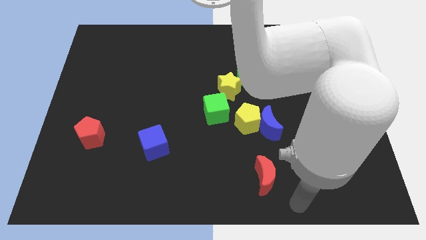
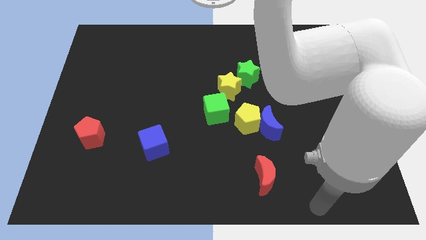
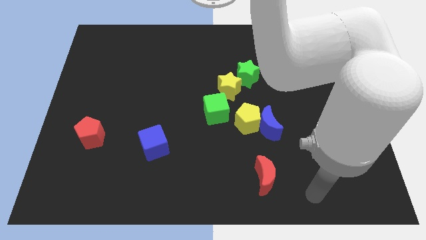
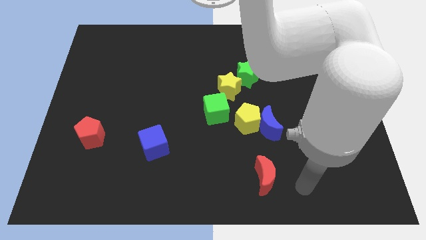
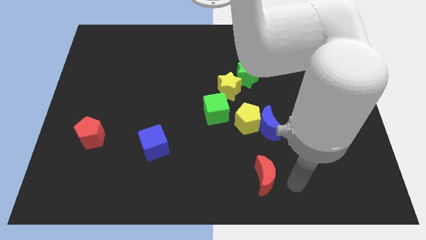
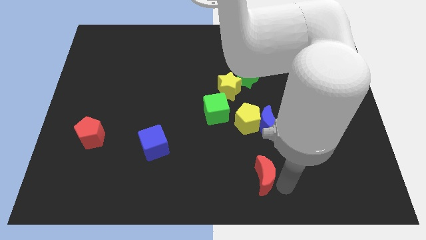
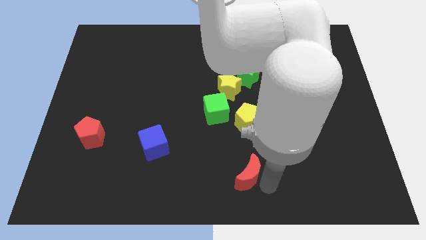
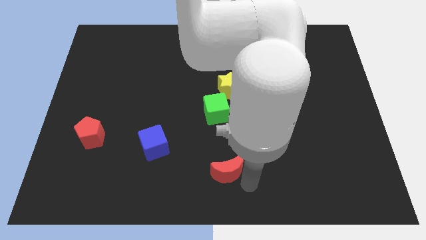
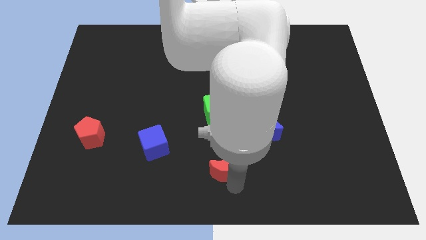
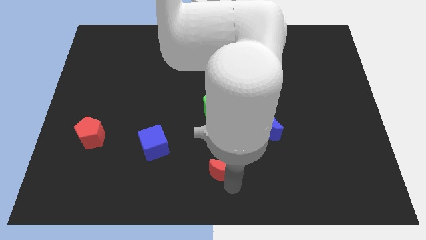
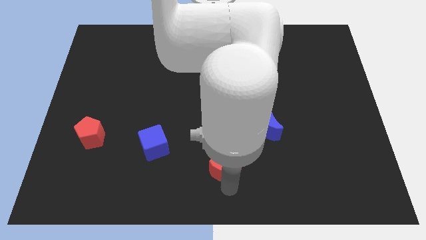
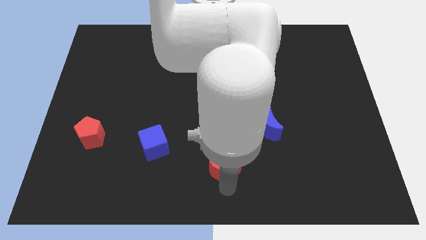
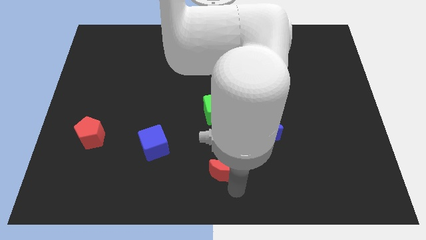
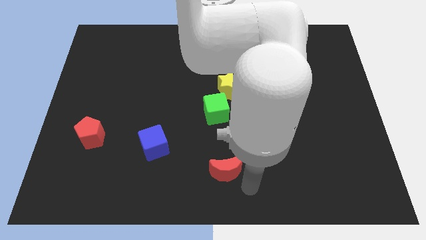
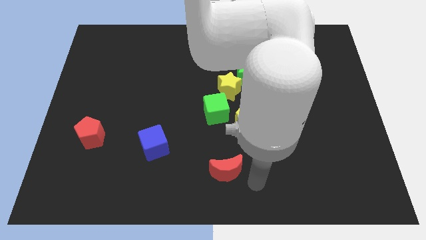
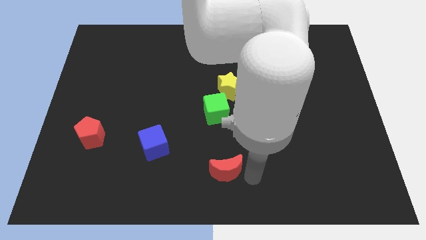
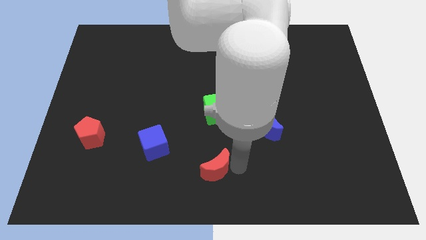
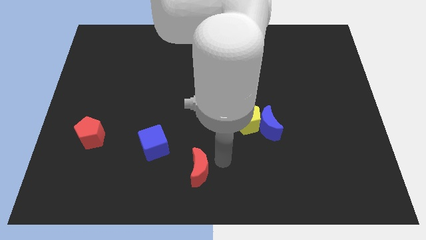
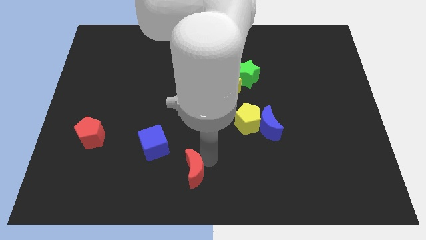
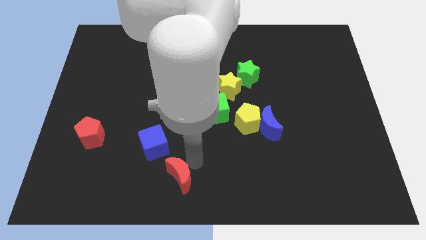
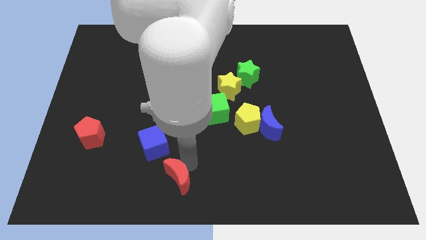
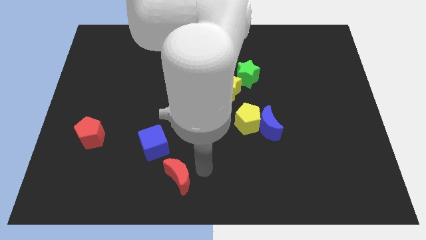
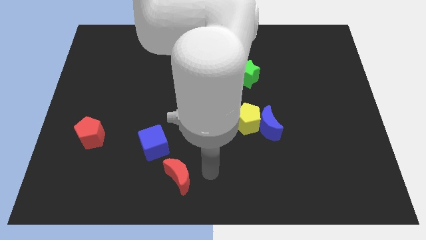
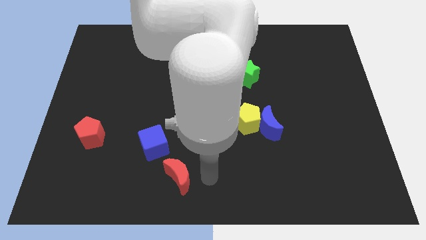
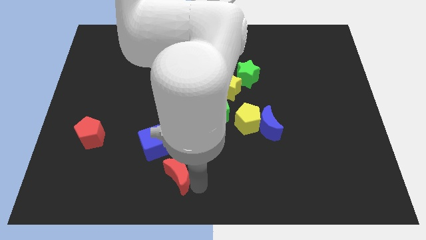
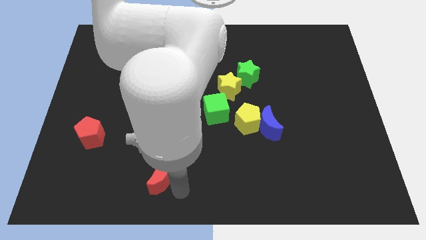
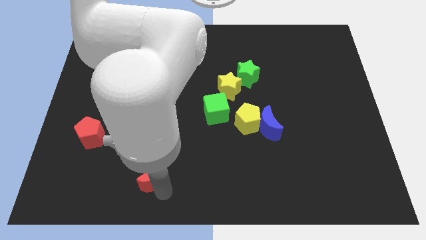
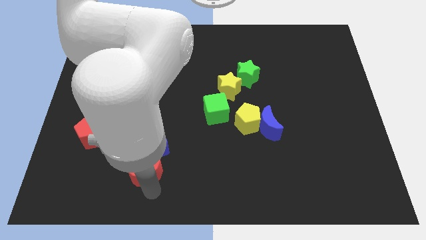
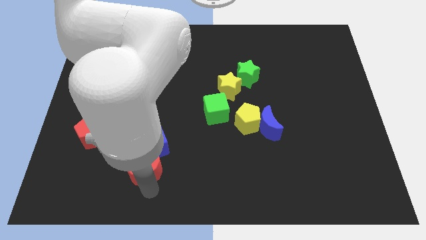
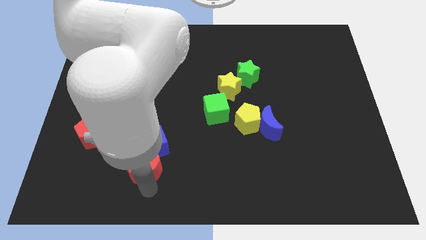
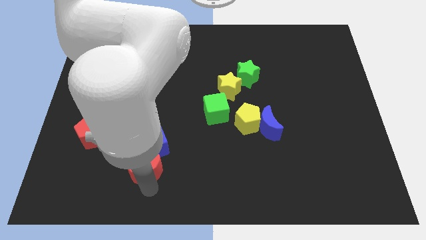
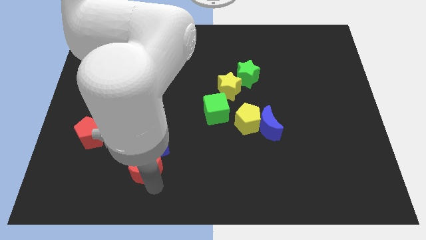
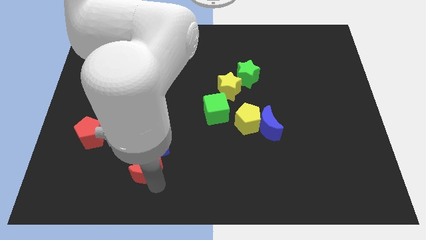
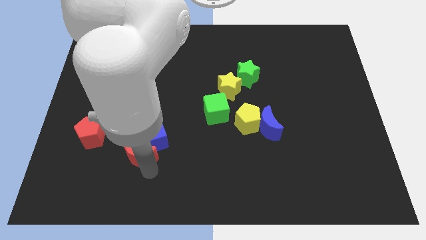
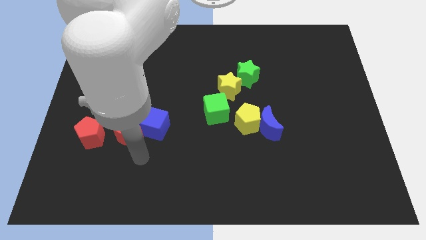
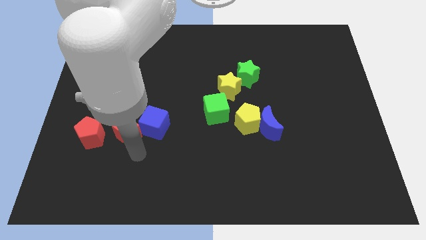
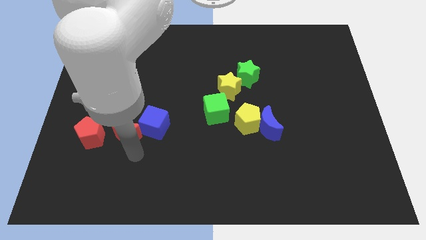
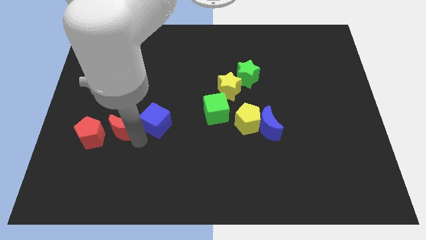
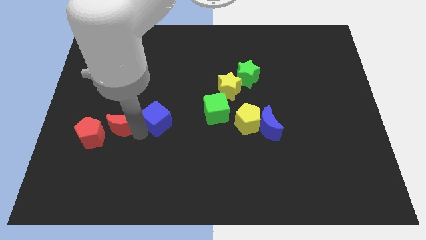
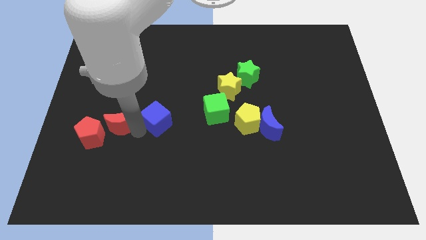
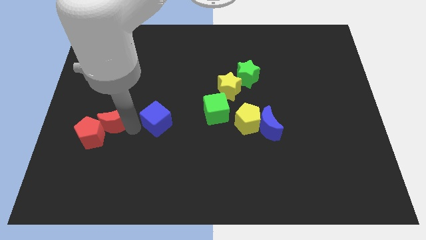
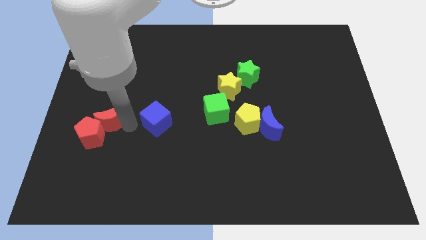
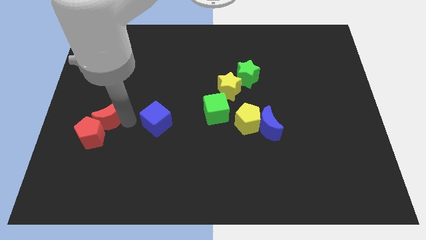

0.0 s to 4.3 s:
move the red crescent to the top right of the red pentagon

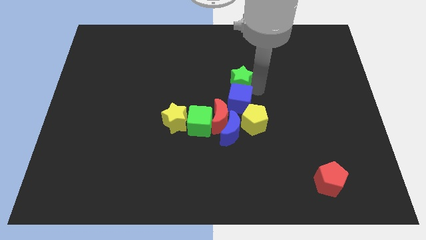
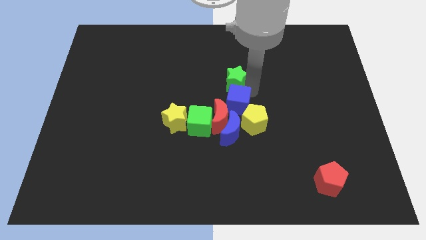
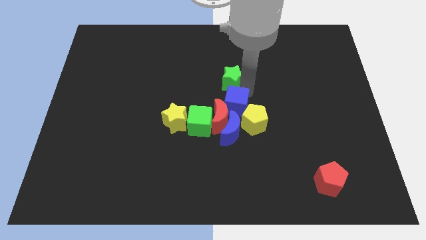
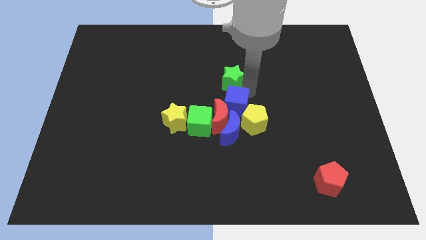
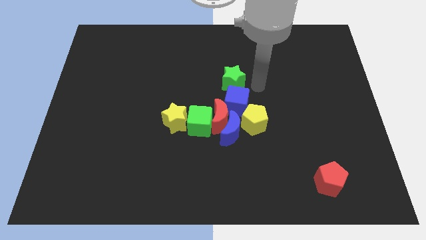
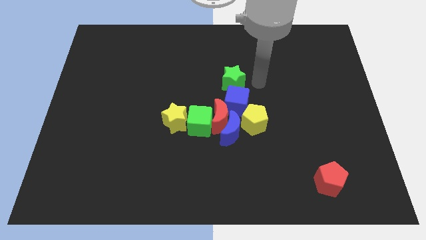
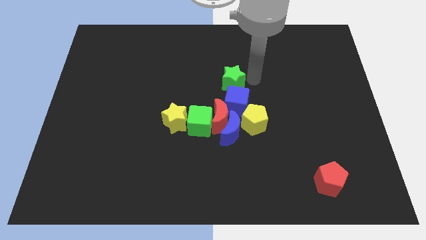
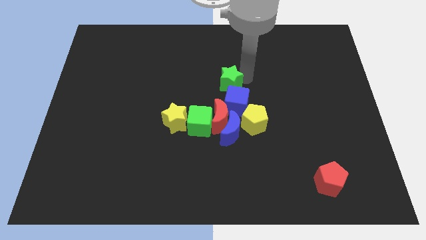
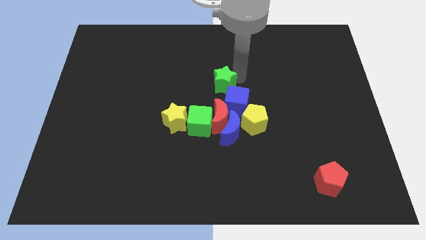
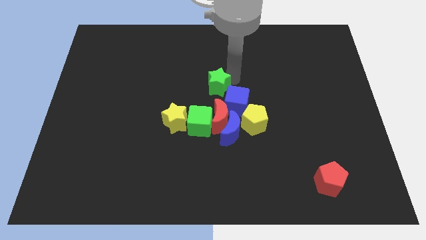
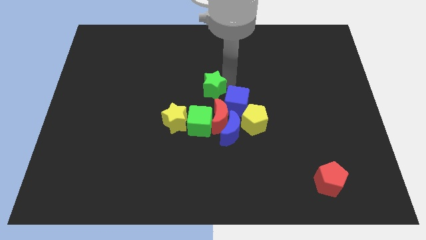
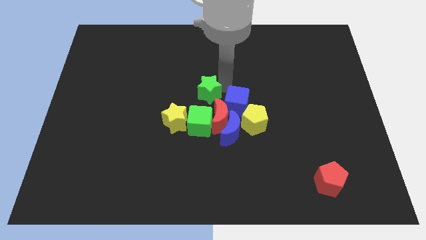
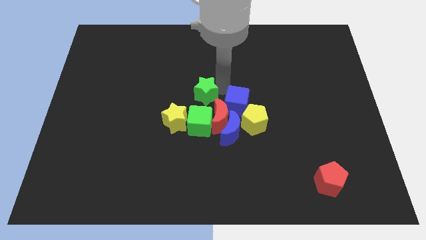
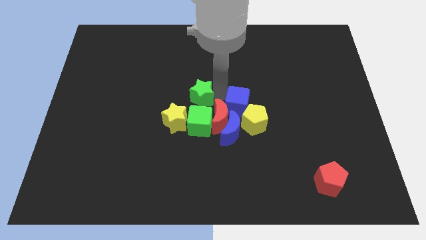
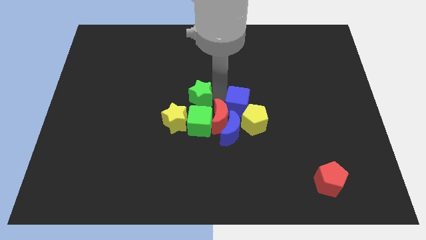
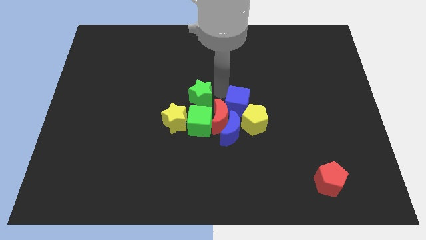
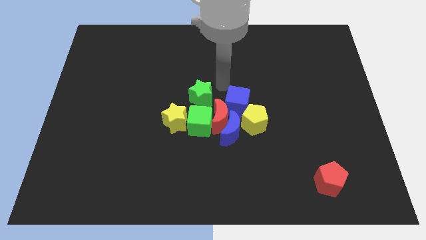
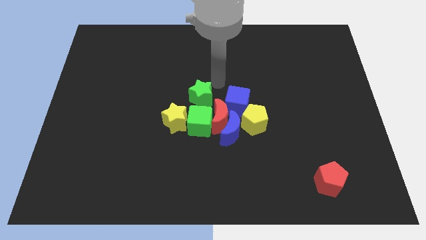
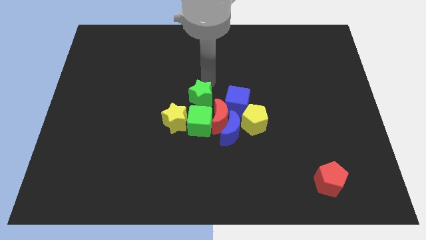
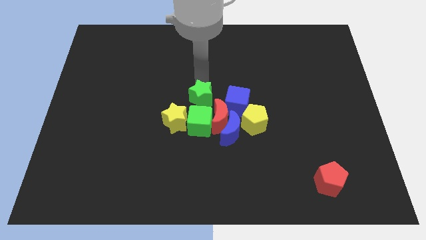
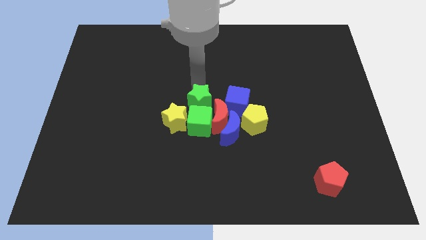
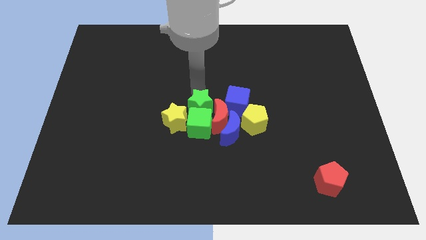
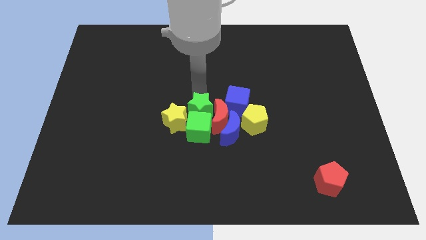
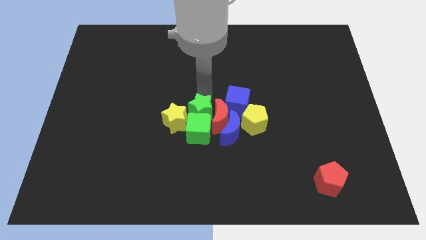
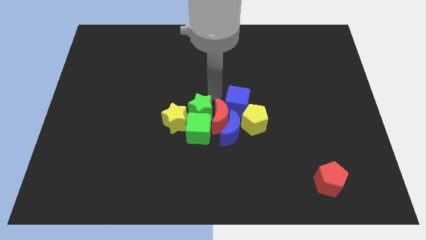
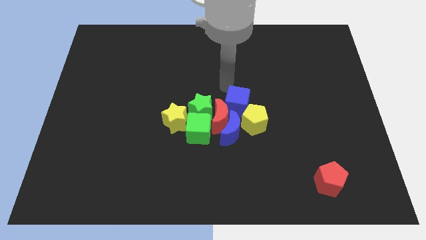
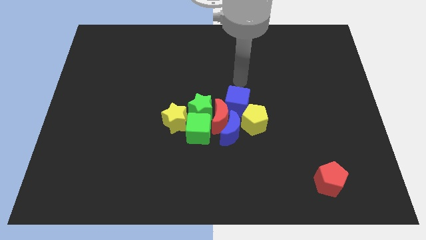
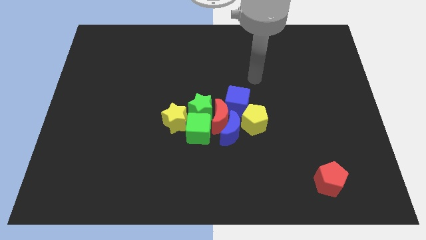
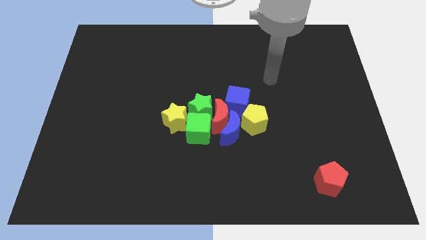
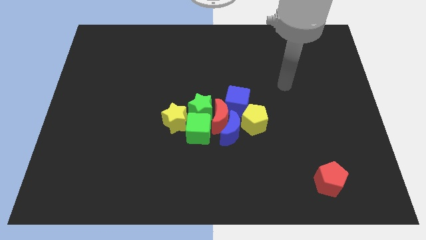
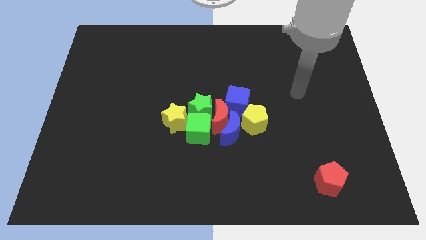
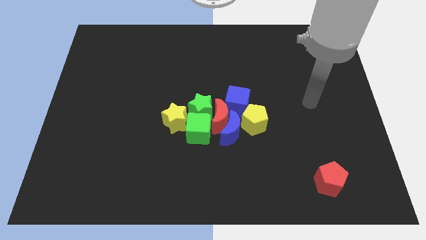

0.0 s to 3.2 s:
place the green star at the top side of the green cube

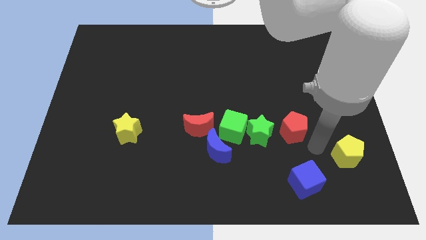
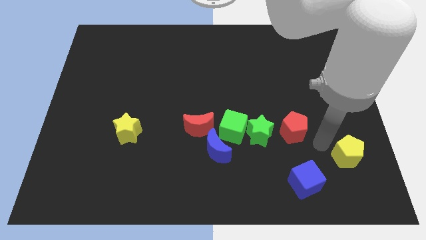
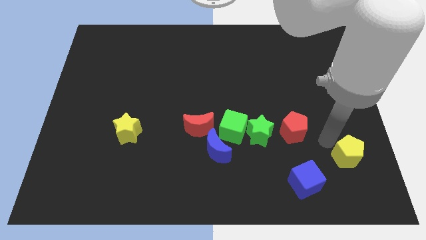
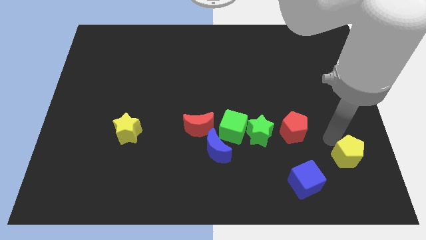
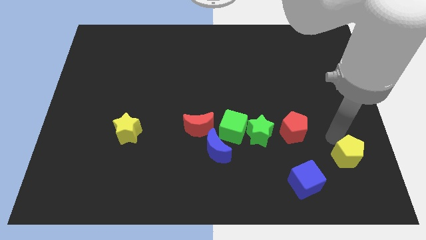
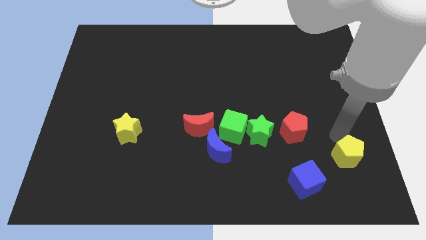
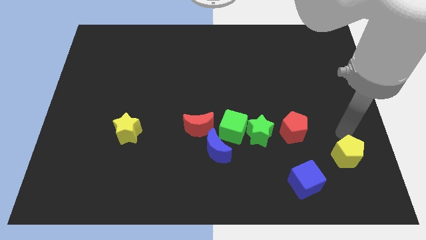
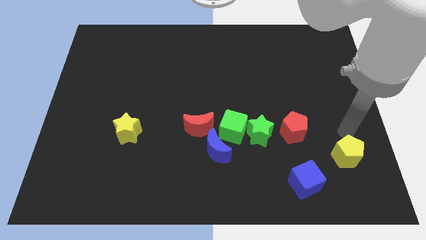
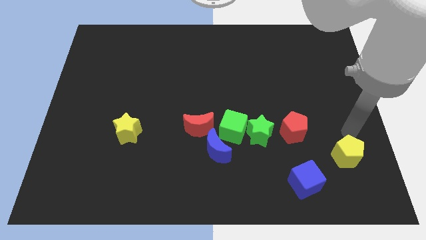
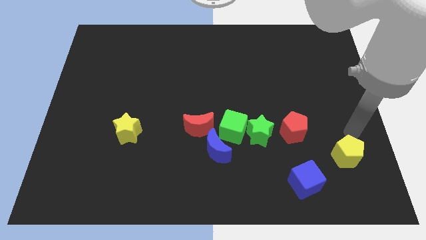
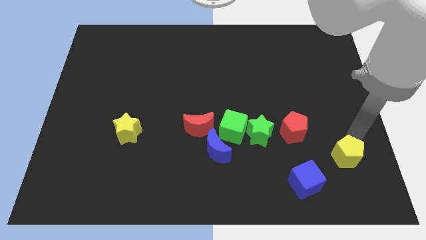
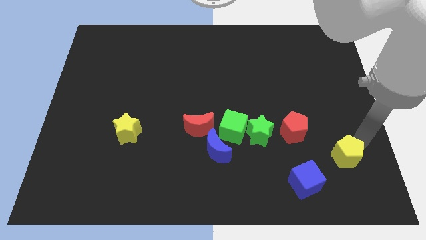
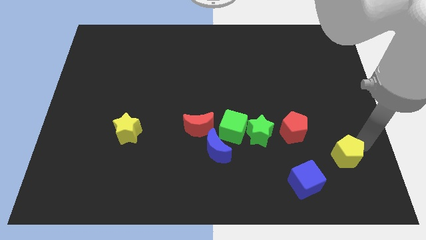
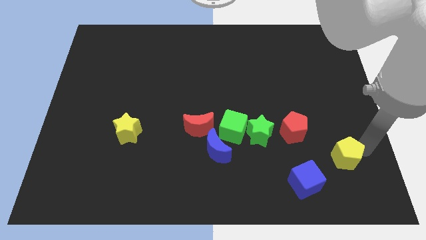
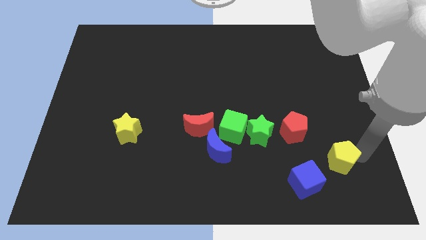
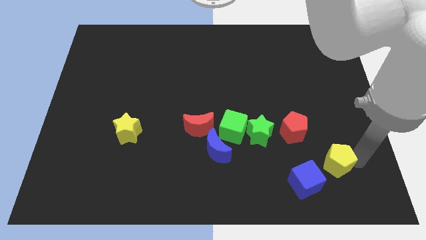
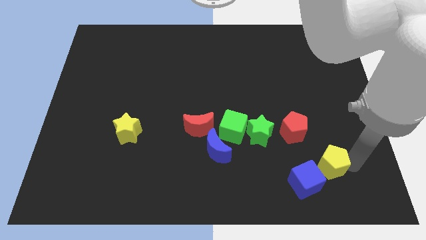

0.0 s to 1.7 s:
push the yellow pentagon right to the blue cube
